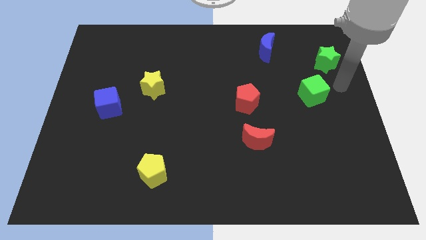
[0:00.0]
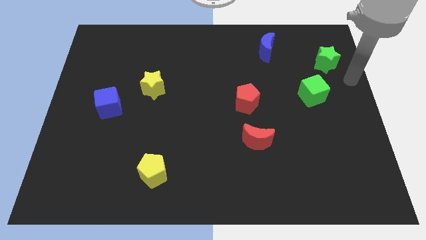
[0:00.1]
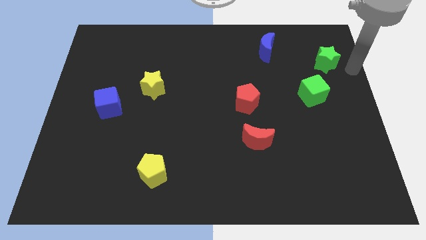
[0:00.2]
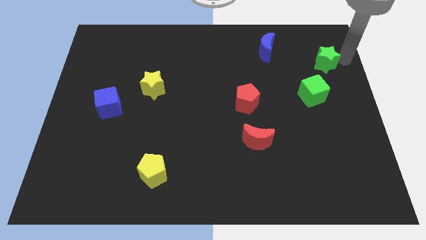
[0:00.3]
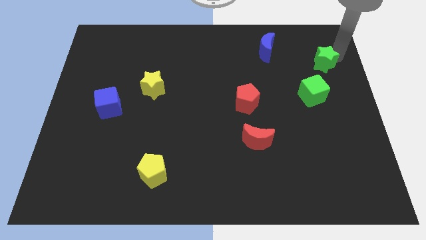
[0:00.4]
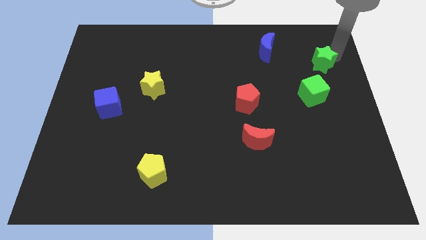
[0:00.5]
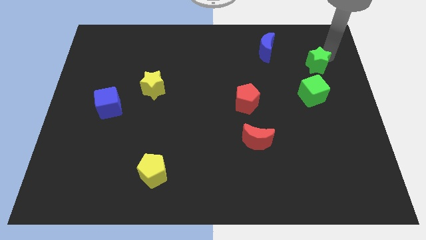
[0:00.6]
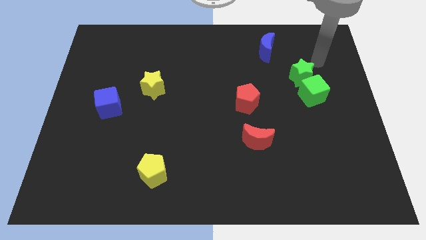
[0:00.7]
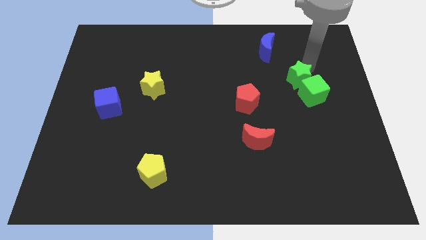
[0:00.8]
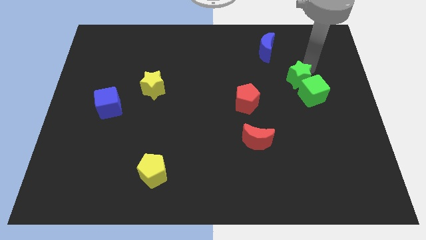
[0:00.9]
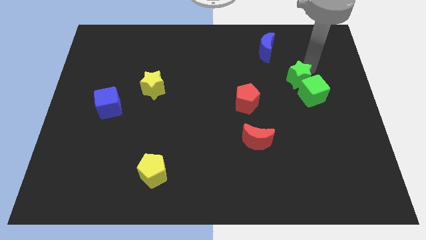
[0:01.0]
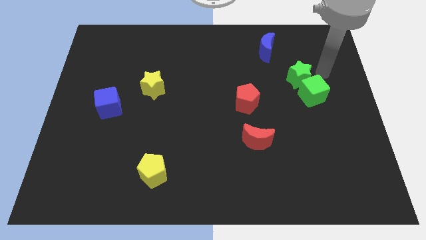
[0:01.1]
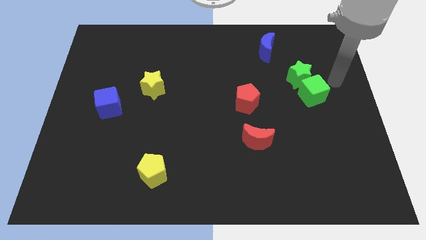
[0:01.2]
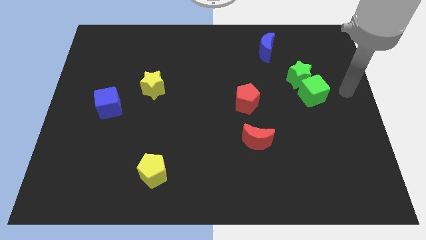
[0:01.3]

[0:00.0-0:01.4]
push the green star into the green cube

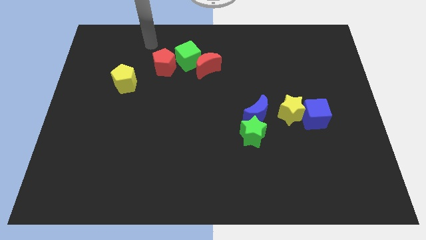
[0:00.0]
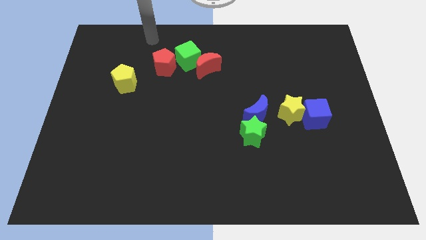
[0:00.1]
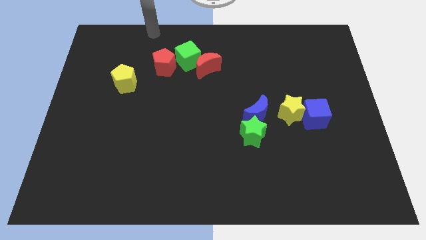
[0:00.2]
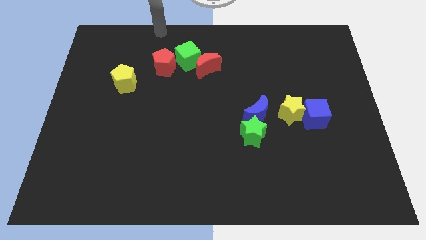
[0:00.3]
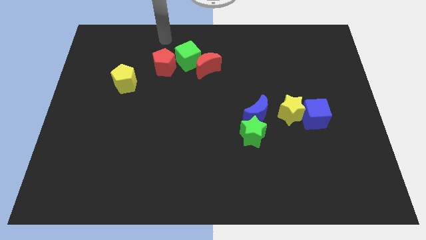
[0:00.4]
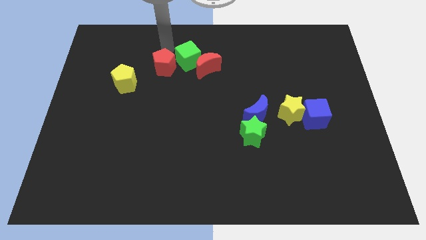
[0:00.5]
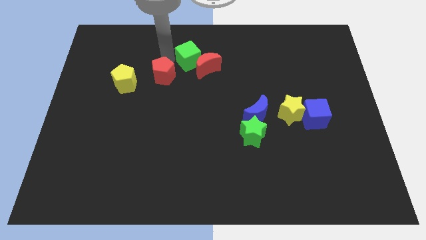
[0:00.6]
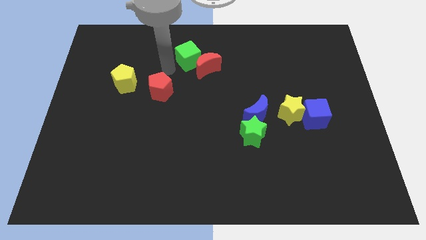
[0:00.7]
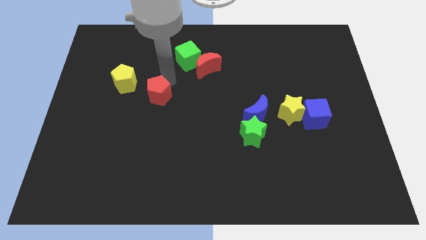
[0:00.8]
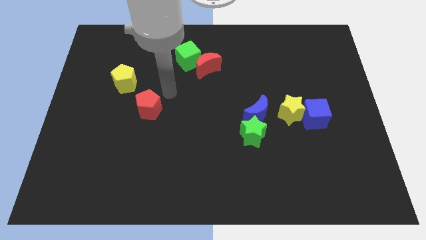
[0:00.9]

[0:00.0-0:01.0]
move the red pentagon away from the green star

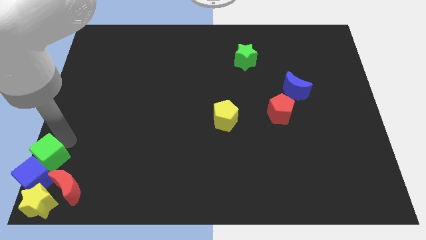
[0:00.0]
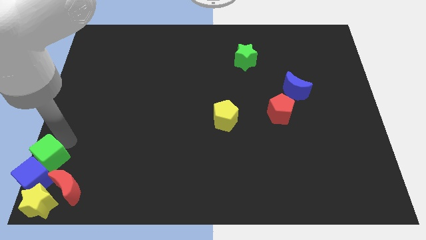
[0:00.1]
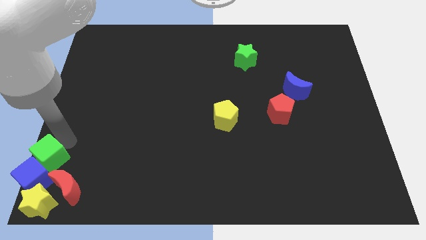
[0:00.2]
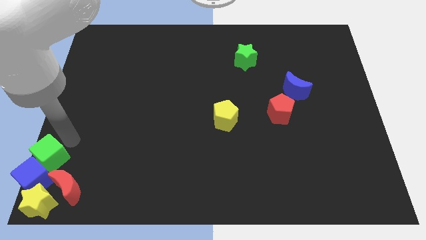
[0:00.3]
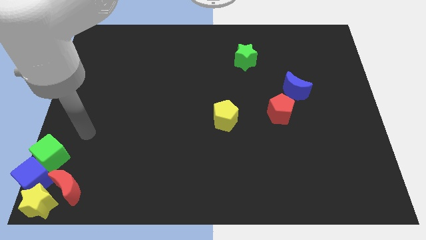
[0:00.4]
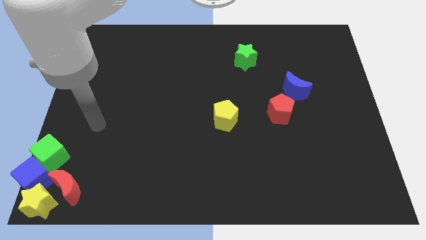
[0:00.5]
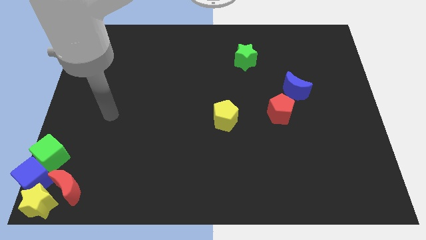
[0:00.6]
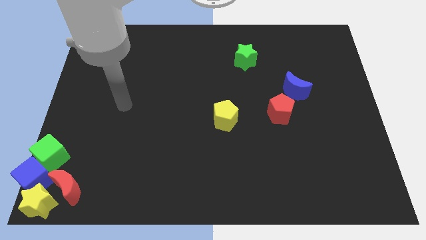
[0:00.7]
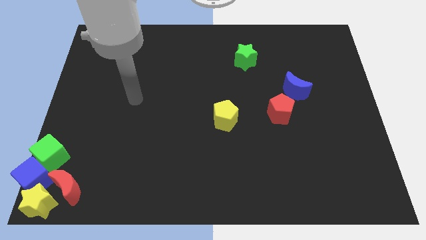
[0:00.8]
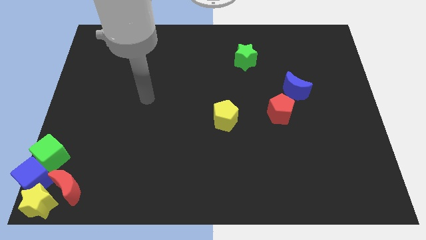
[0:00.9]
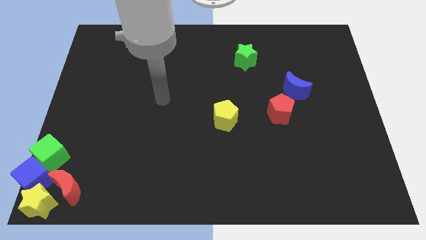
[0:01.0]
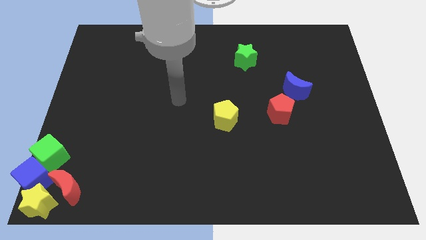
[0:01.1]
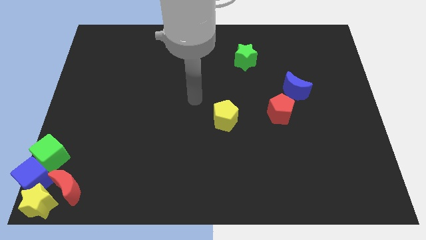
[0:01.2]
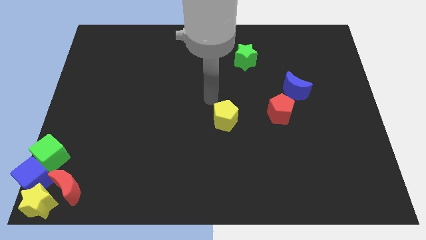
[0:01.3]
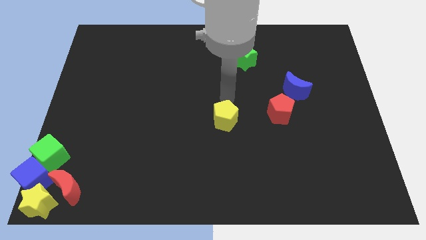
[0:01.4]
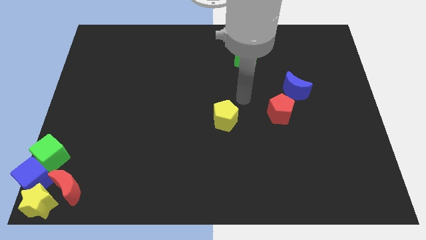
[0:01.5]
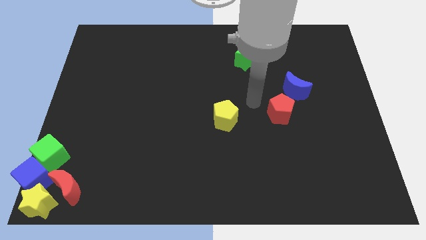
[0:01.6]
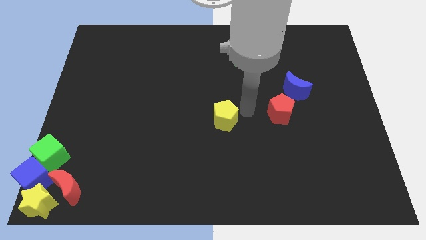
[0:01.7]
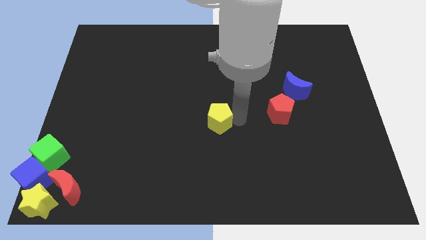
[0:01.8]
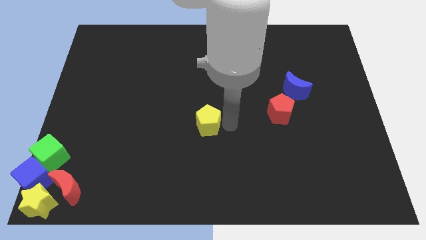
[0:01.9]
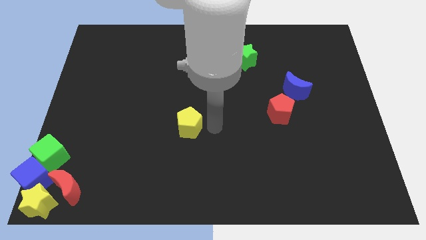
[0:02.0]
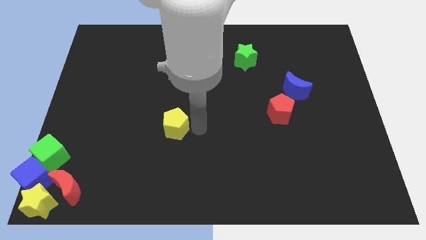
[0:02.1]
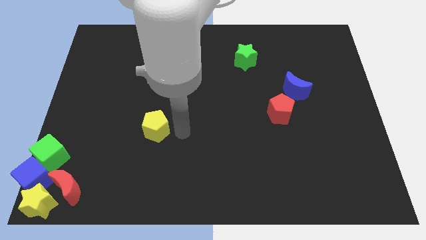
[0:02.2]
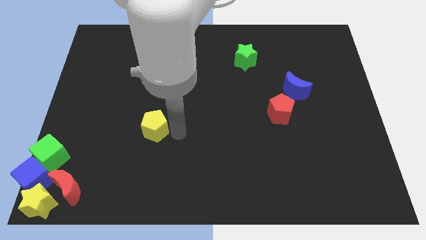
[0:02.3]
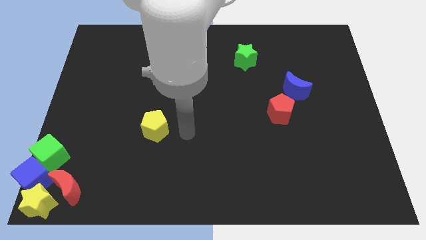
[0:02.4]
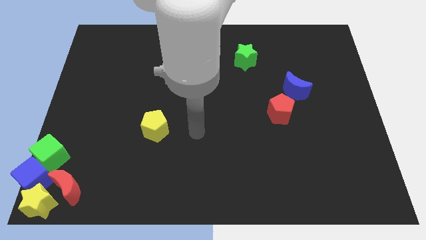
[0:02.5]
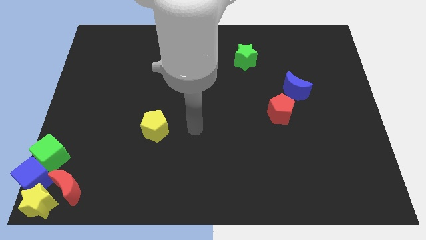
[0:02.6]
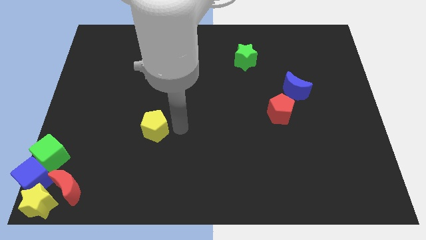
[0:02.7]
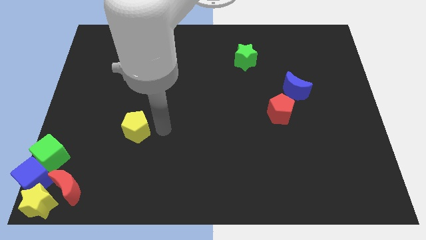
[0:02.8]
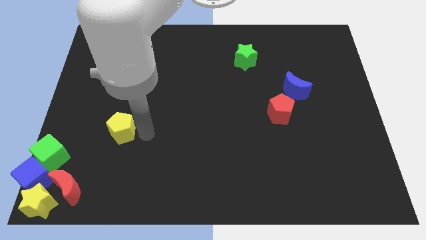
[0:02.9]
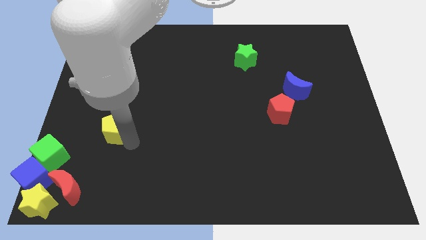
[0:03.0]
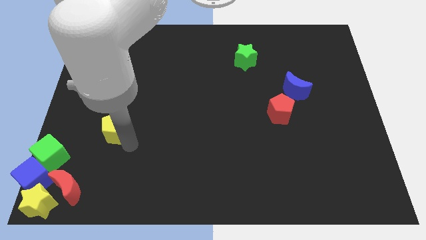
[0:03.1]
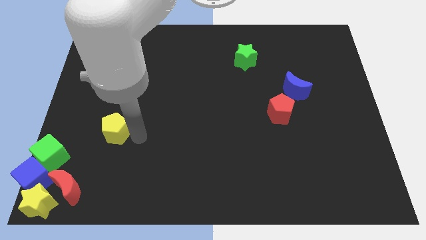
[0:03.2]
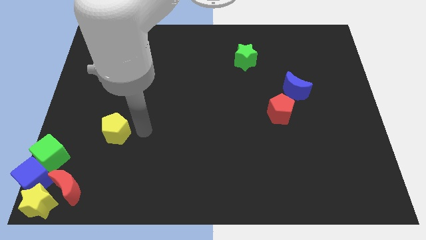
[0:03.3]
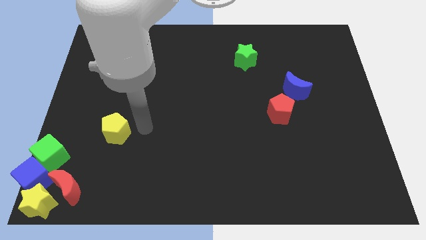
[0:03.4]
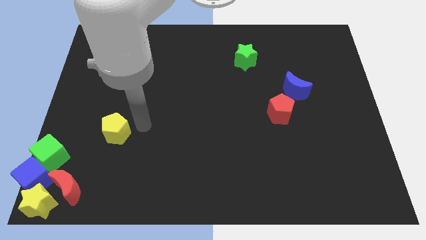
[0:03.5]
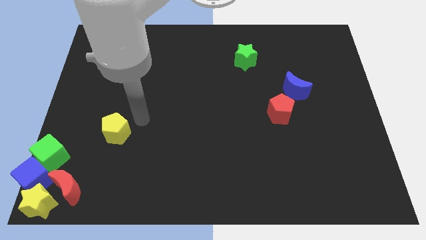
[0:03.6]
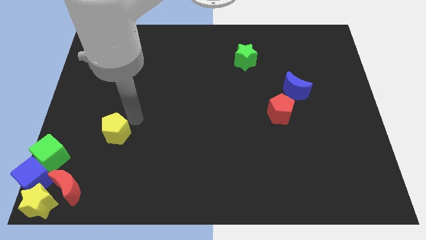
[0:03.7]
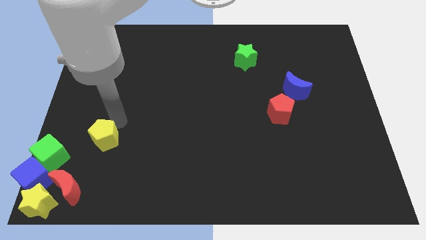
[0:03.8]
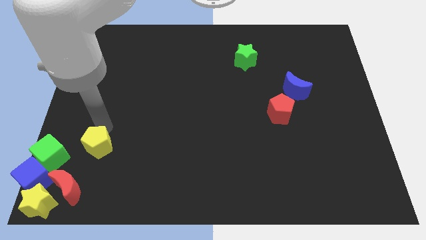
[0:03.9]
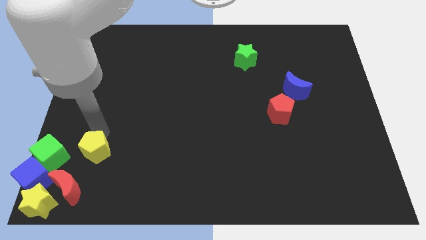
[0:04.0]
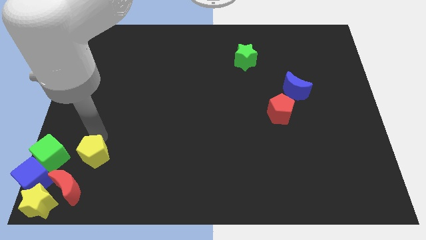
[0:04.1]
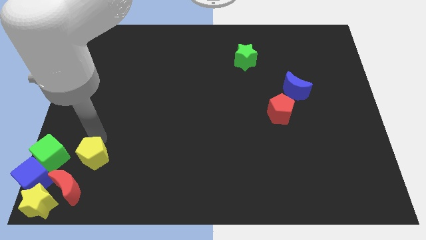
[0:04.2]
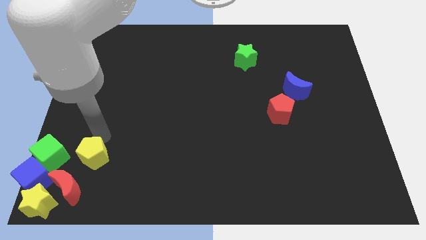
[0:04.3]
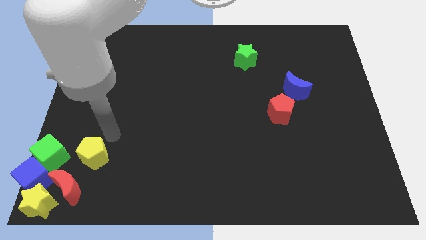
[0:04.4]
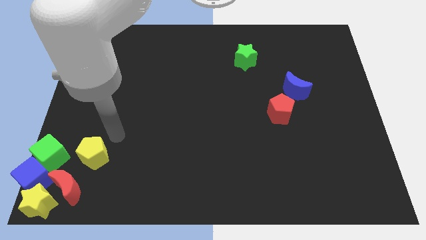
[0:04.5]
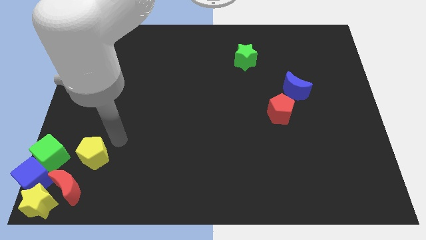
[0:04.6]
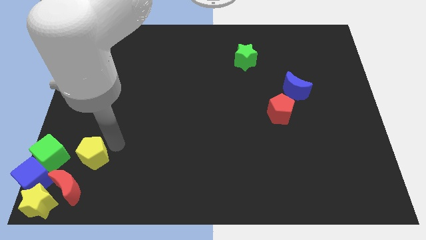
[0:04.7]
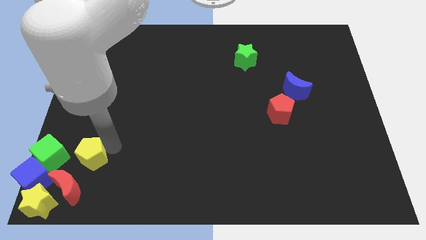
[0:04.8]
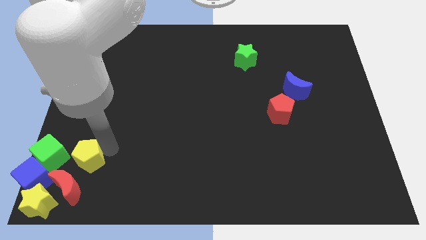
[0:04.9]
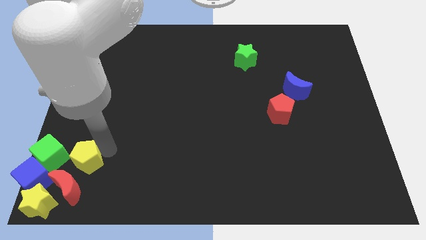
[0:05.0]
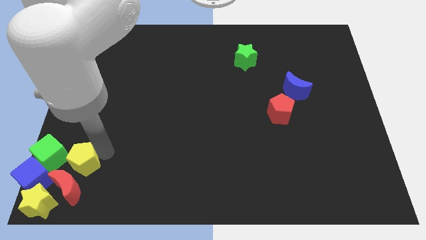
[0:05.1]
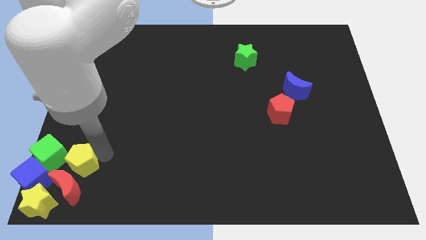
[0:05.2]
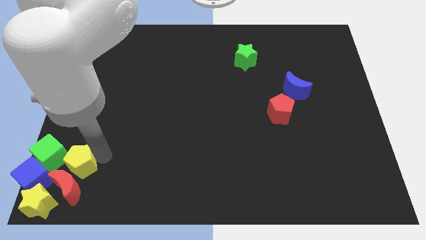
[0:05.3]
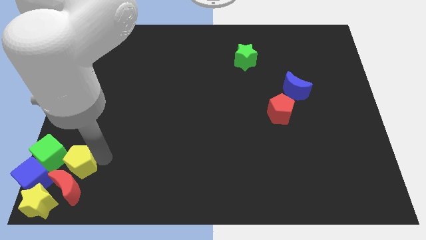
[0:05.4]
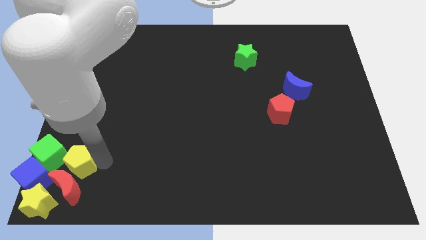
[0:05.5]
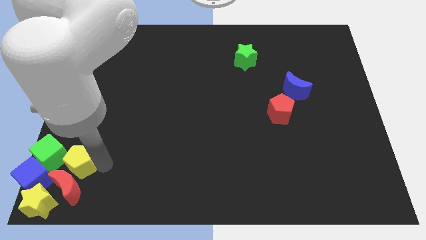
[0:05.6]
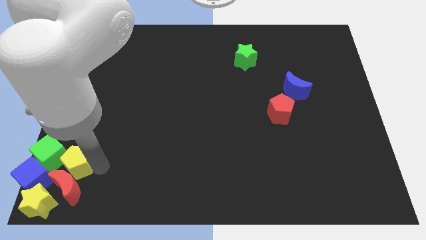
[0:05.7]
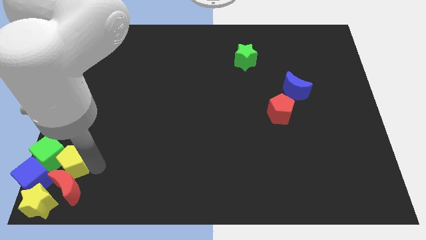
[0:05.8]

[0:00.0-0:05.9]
place the yellow pentagon right to the green cube

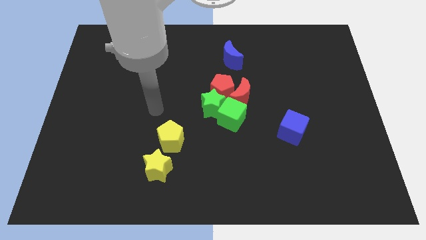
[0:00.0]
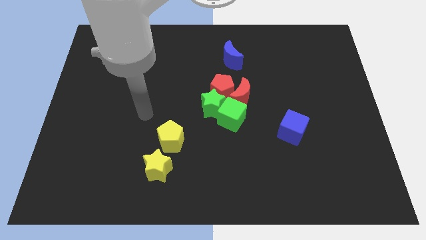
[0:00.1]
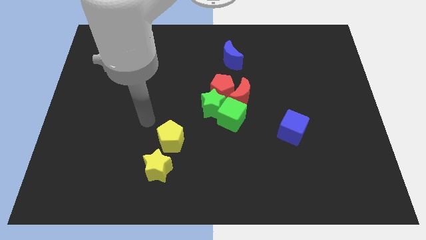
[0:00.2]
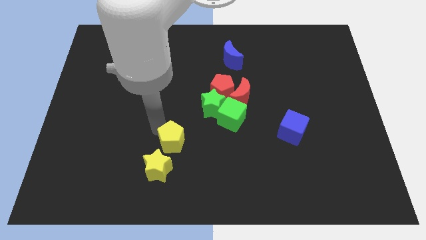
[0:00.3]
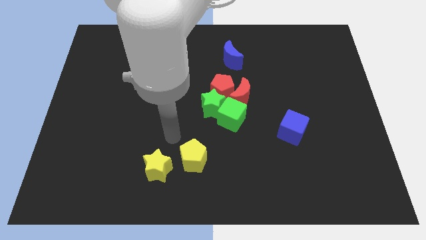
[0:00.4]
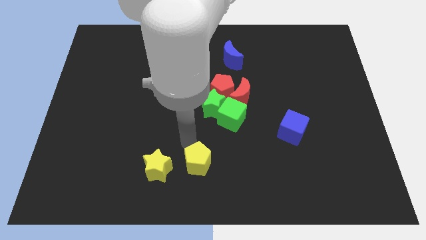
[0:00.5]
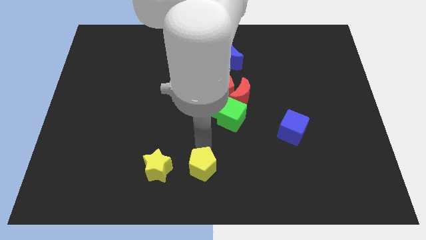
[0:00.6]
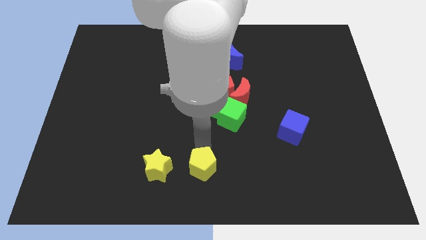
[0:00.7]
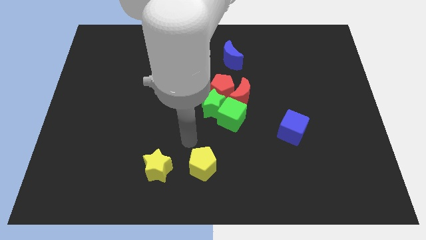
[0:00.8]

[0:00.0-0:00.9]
separate yellow pentagon from yellow star
